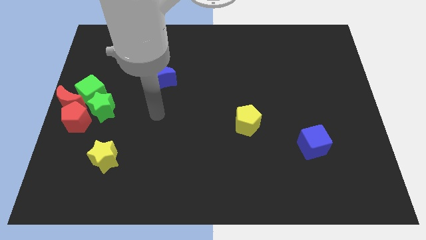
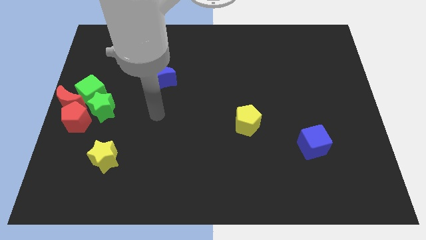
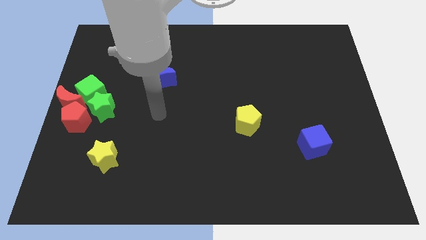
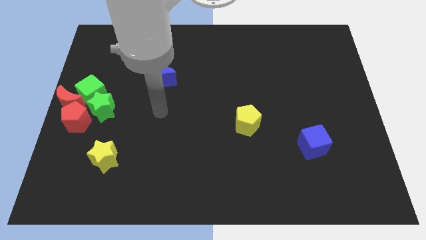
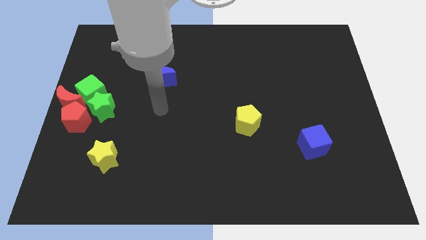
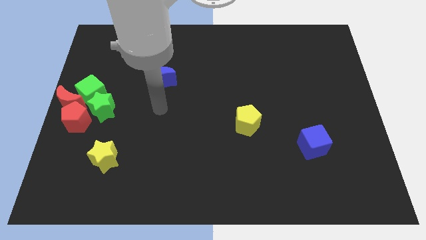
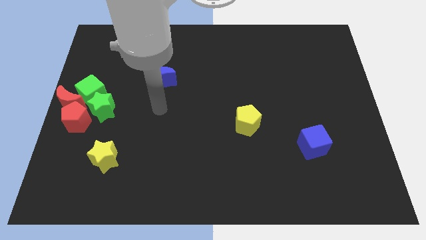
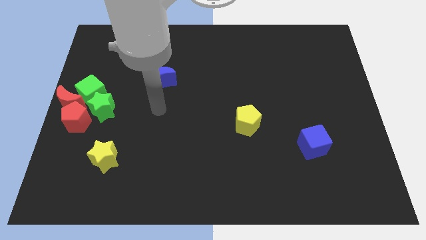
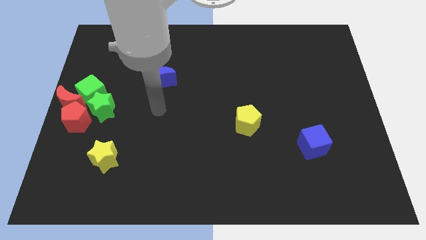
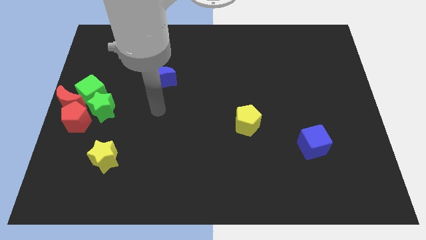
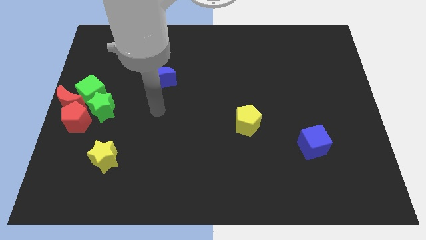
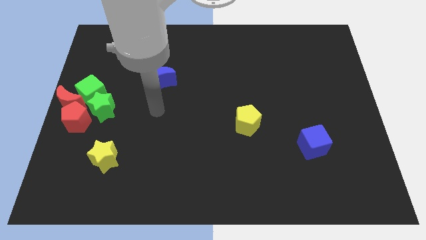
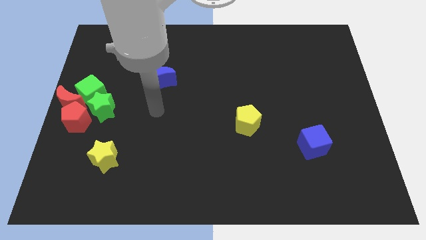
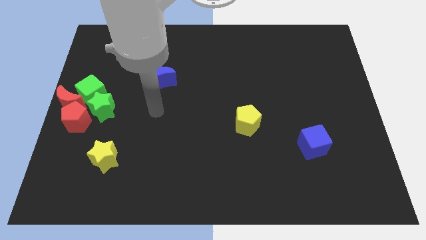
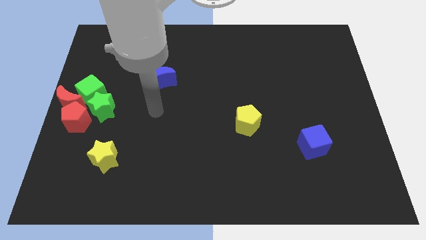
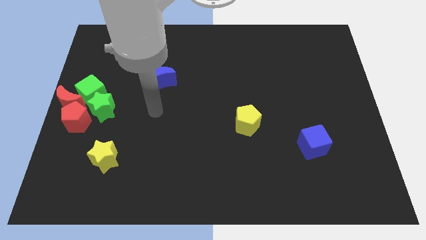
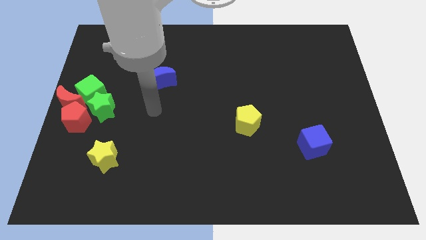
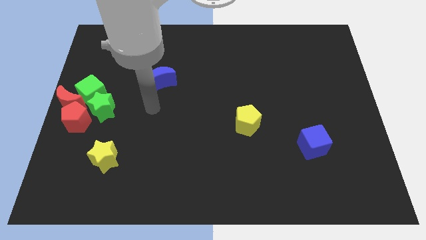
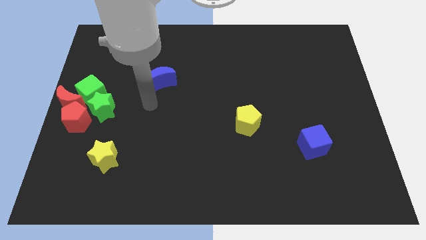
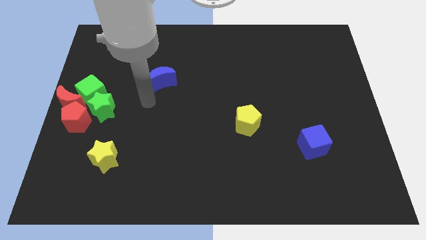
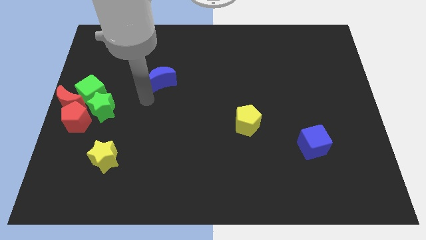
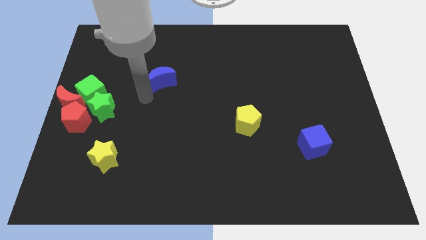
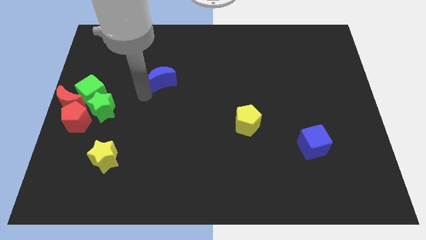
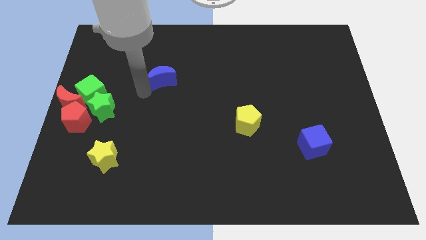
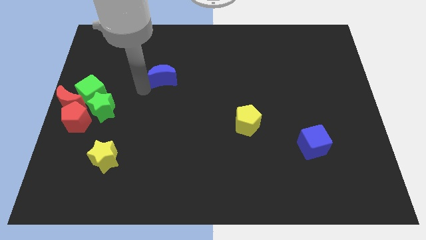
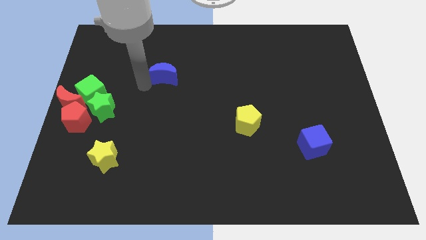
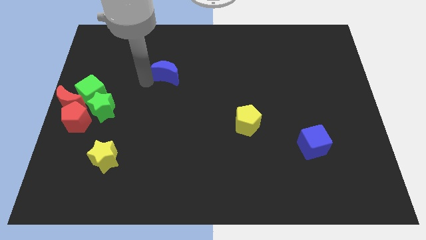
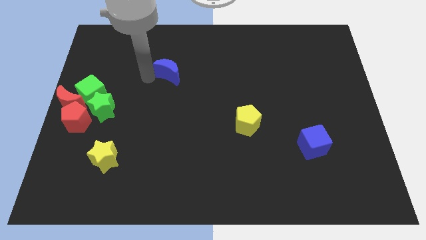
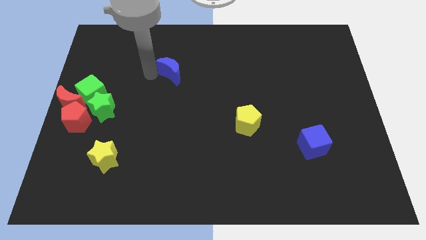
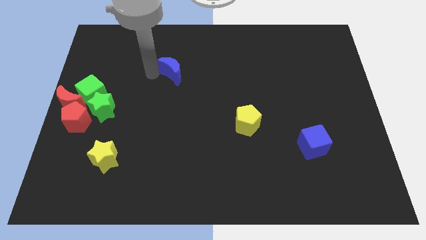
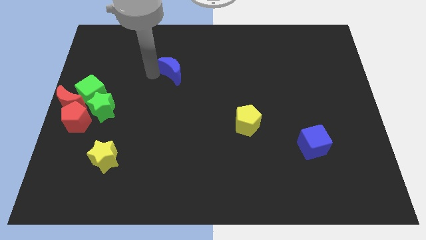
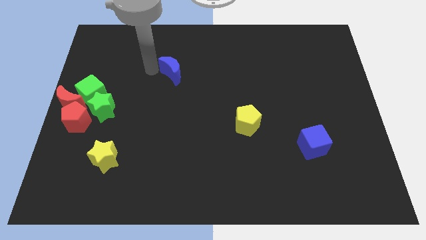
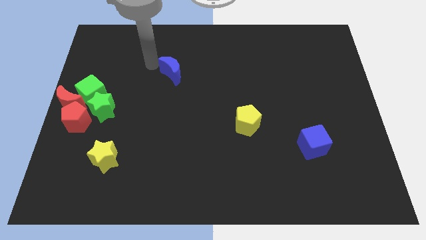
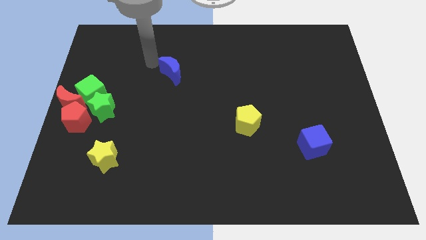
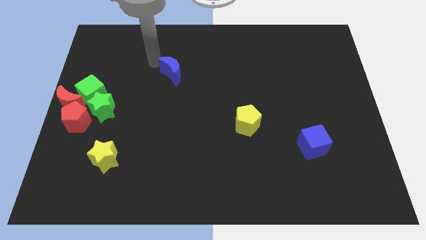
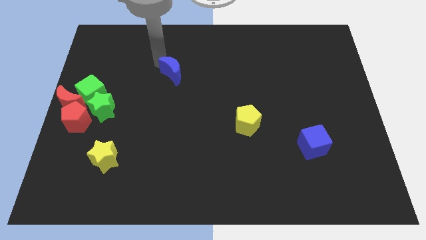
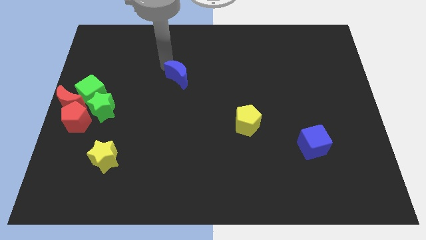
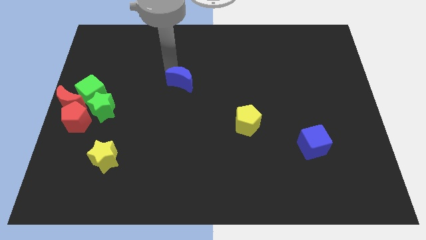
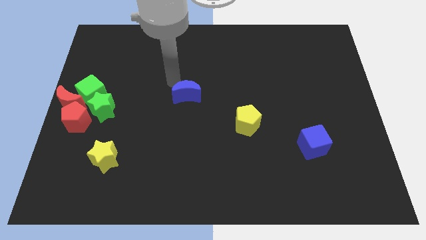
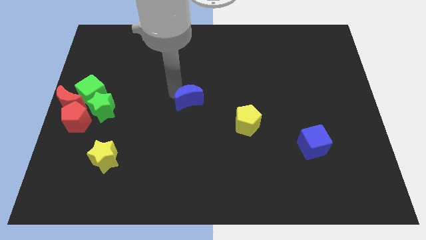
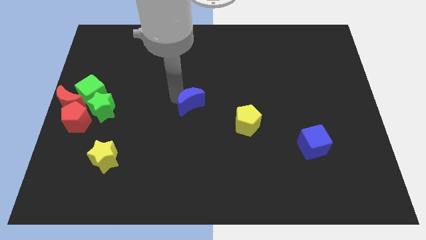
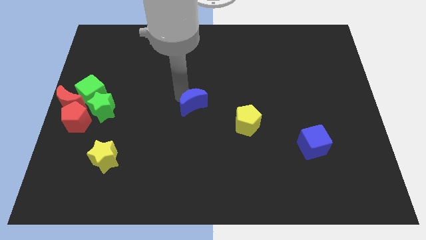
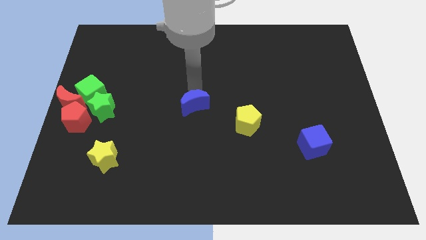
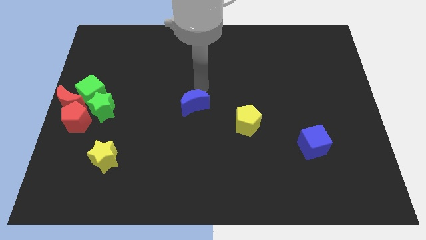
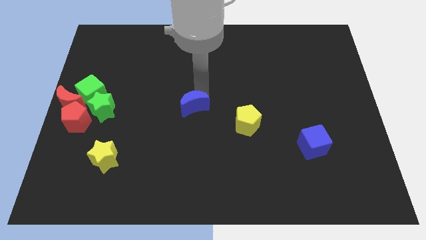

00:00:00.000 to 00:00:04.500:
move the blue moon to the center of the board

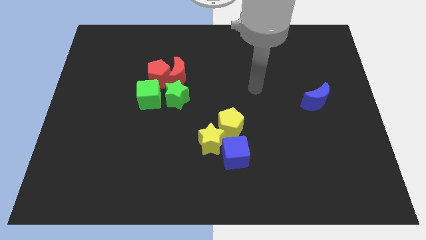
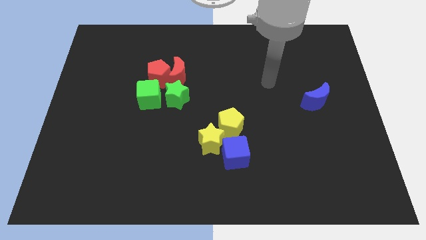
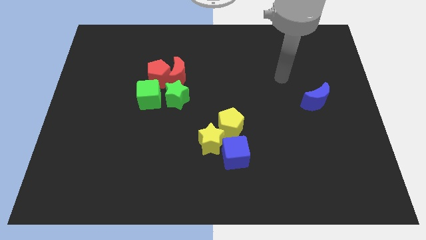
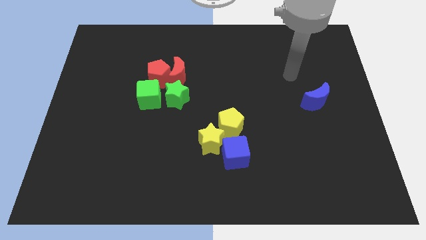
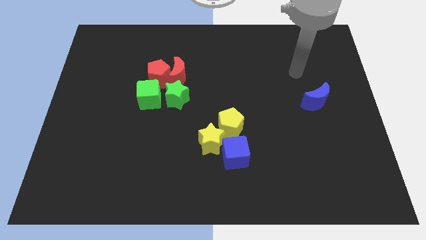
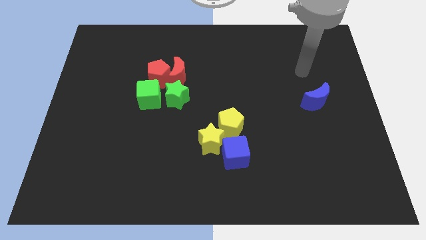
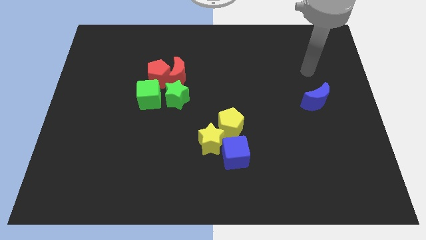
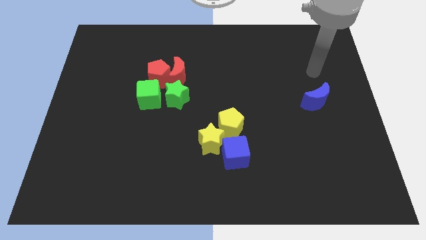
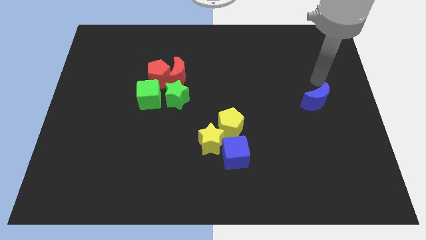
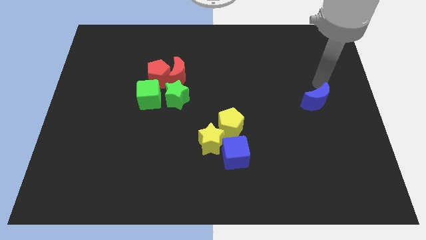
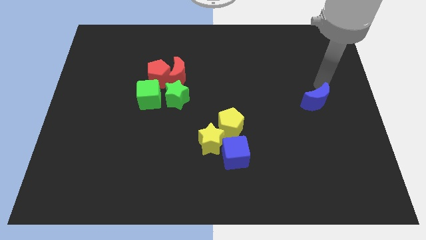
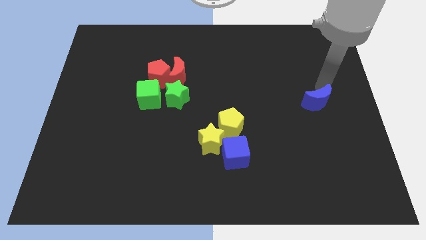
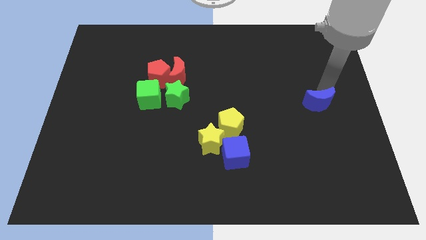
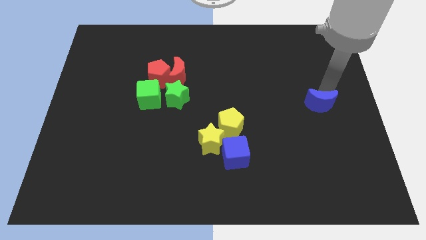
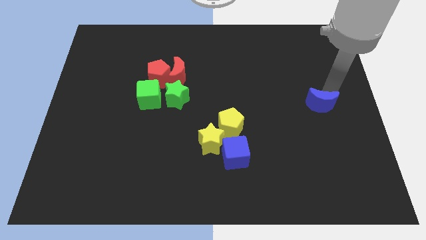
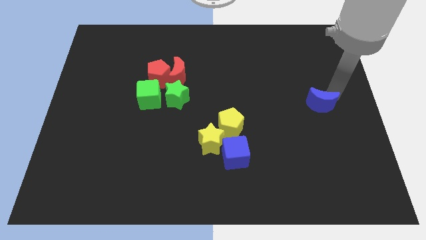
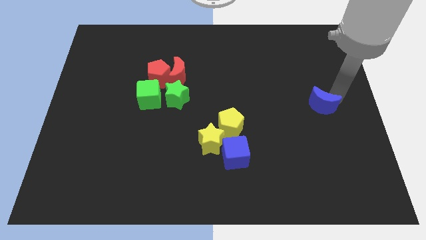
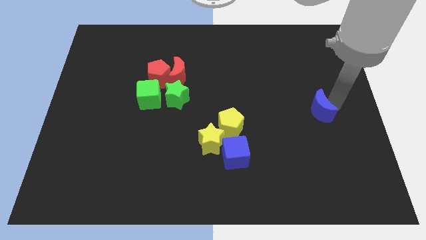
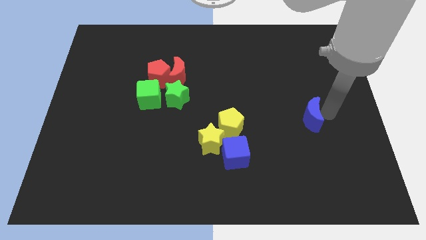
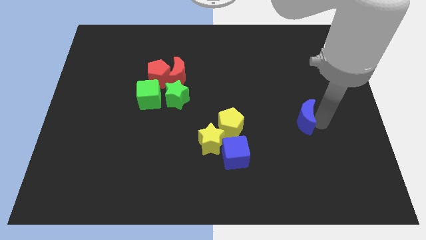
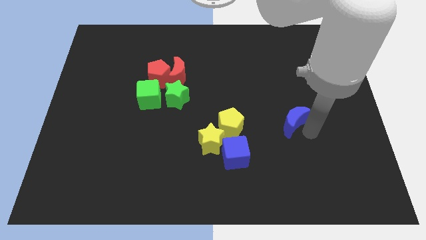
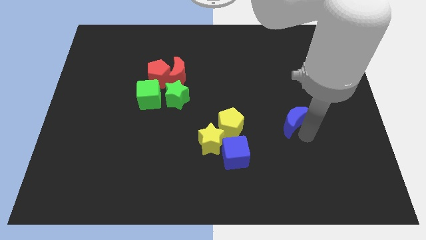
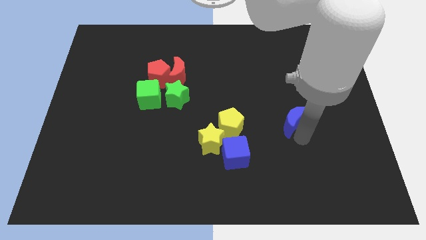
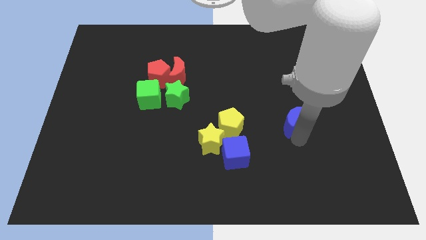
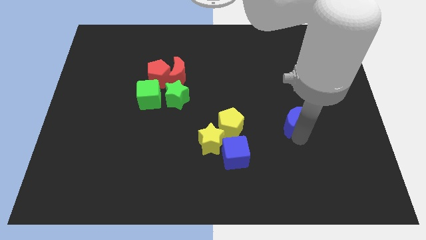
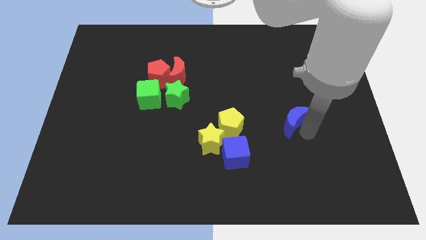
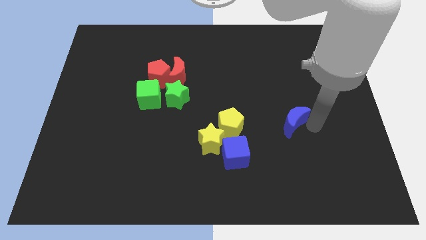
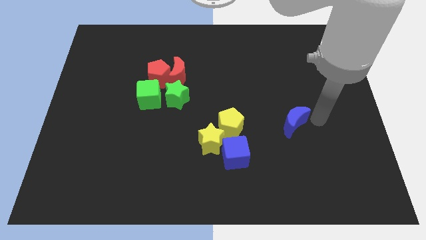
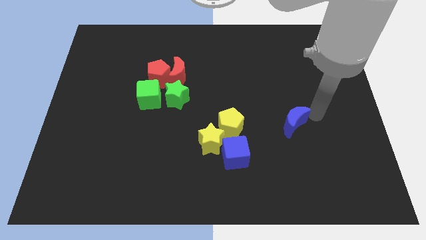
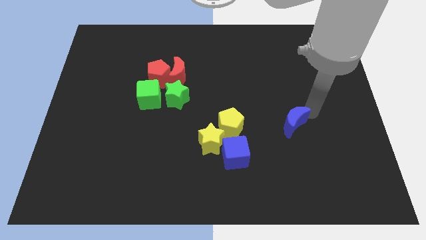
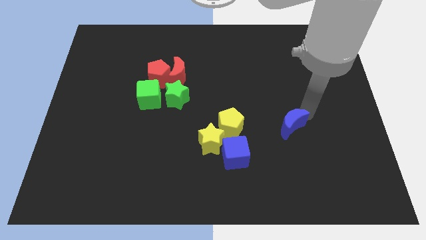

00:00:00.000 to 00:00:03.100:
push the blue crescent to the bottom left of the board

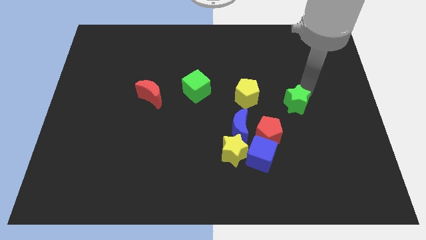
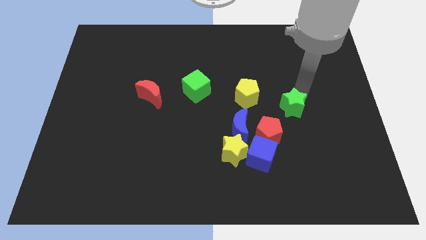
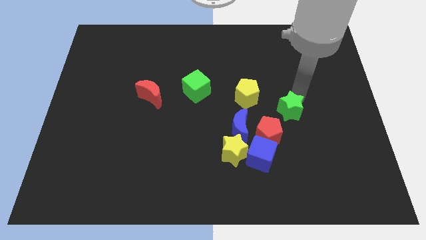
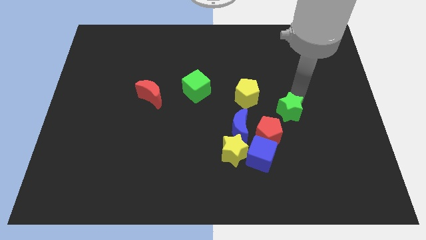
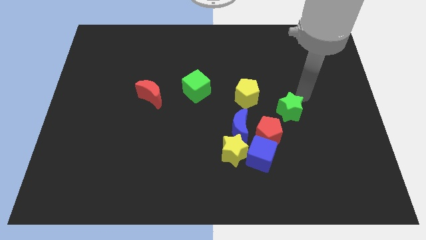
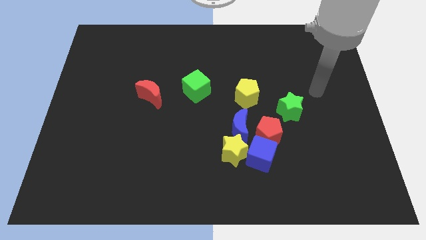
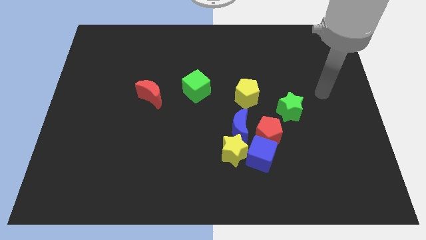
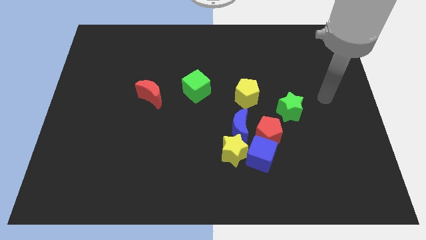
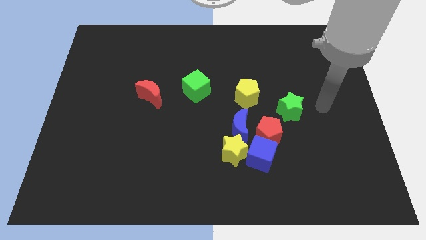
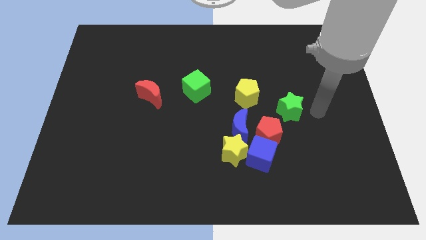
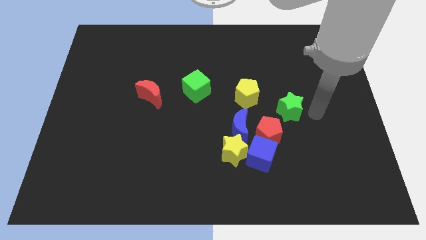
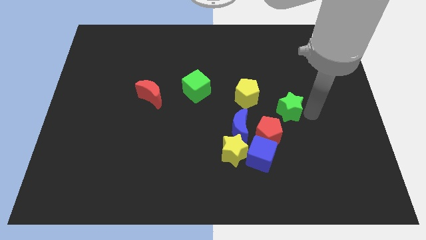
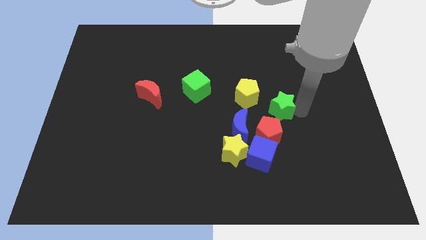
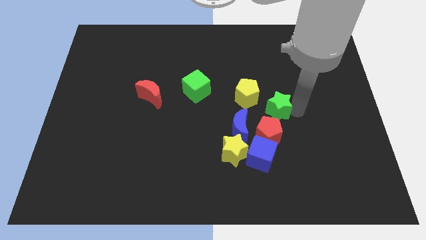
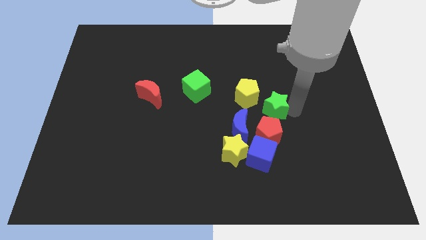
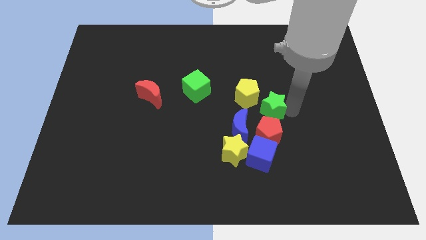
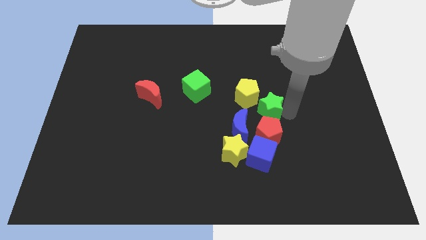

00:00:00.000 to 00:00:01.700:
move the green star to the top of the red pentagon
